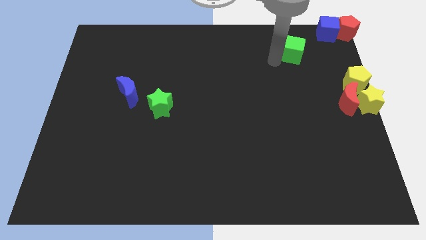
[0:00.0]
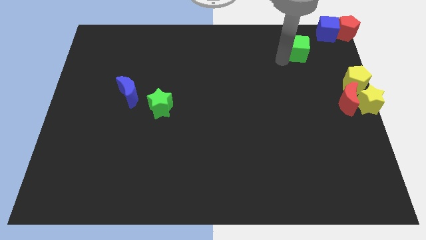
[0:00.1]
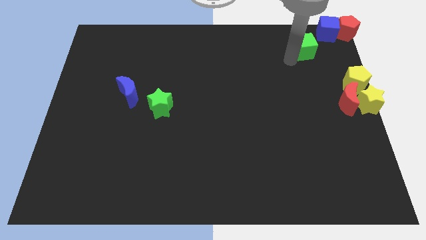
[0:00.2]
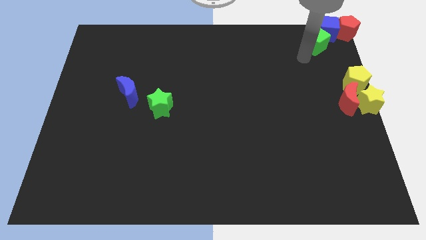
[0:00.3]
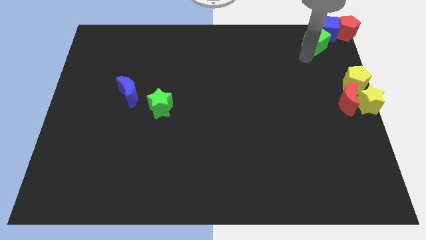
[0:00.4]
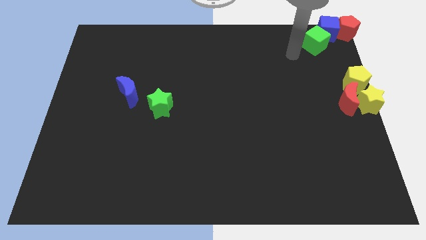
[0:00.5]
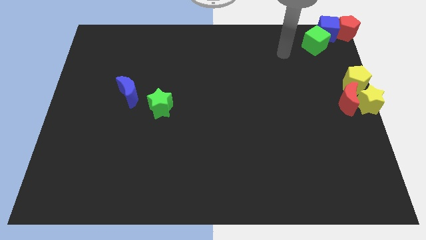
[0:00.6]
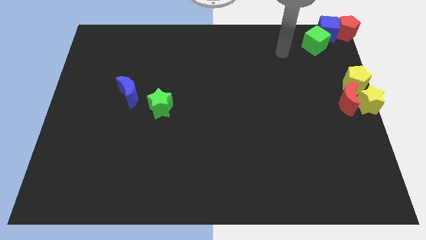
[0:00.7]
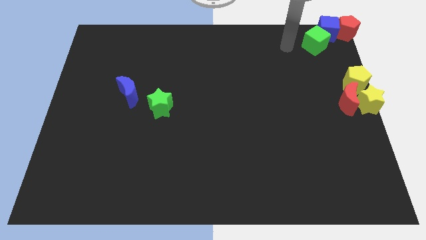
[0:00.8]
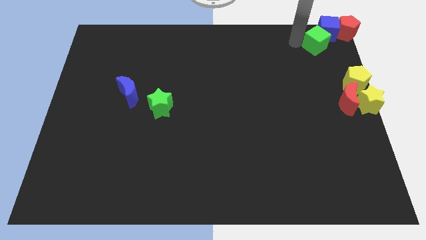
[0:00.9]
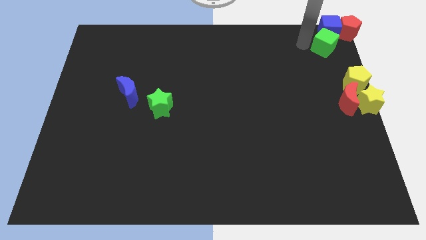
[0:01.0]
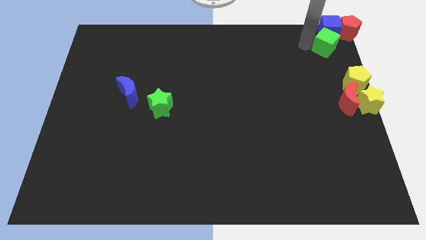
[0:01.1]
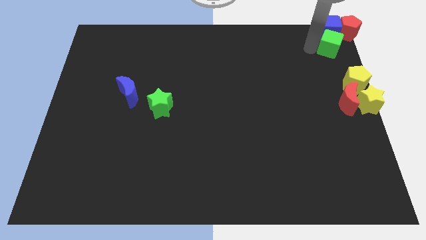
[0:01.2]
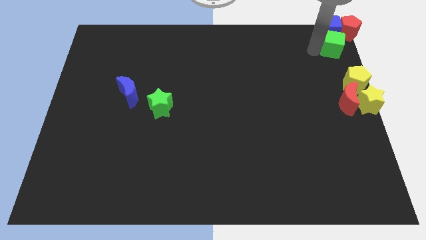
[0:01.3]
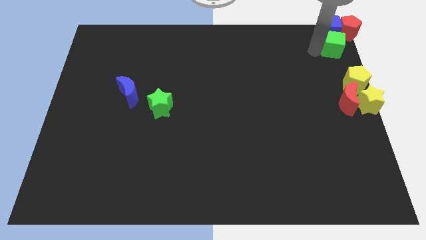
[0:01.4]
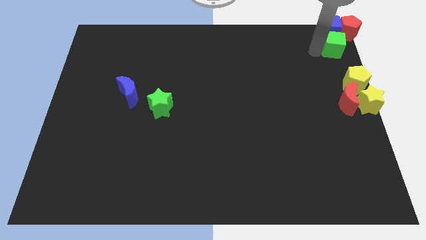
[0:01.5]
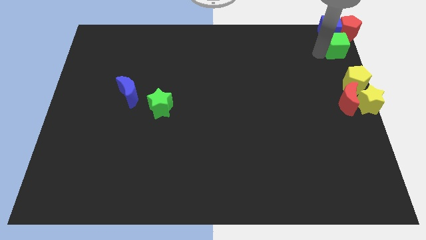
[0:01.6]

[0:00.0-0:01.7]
drag the green cube to the bottom of the blue cube

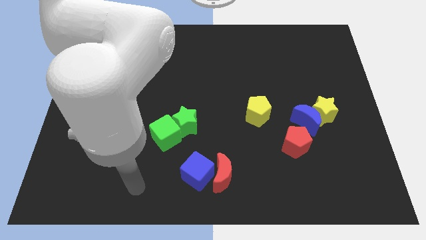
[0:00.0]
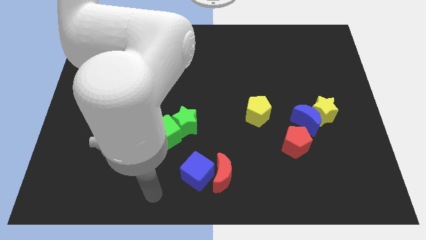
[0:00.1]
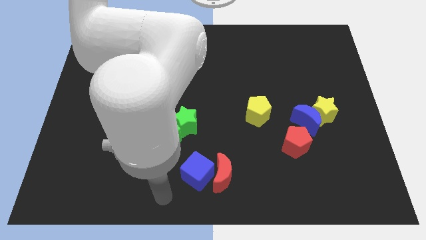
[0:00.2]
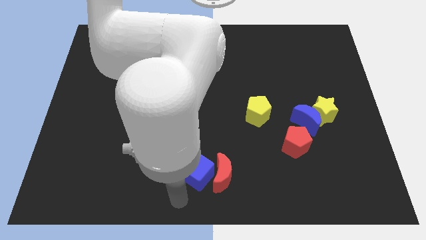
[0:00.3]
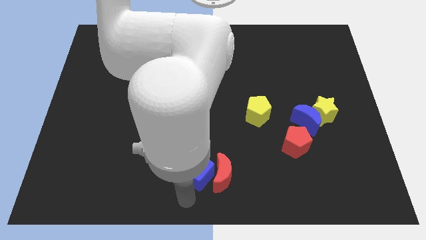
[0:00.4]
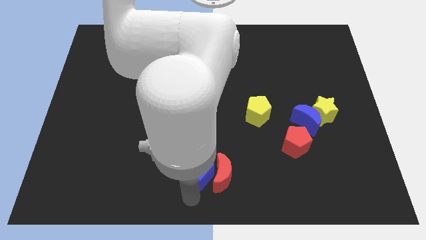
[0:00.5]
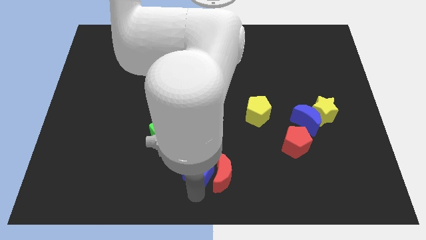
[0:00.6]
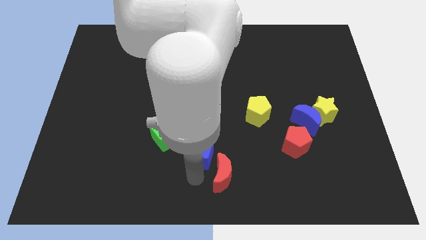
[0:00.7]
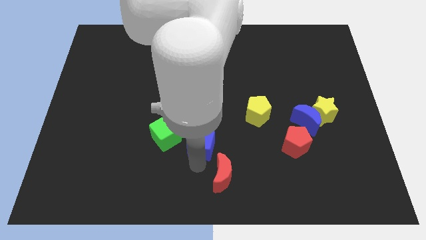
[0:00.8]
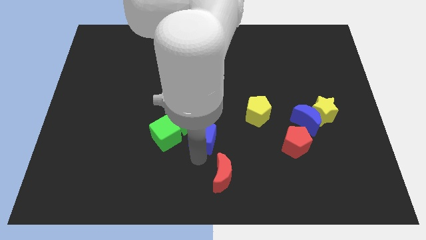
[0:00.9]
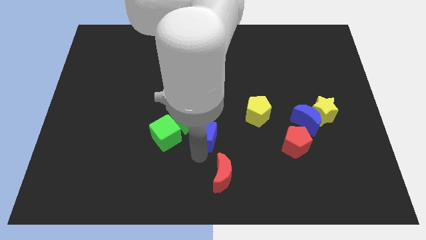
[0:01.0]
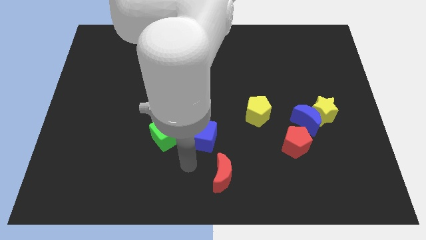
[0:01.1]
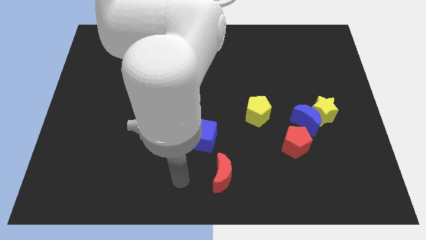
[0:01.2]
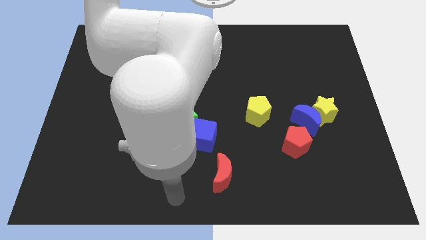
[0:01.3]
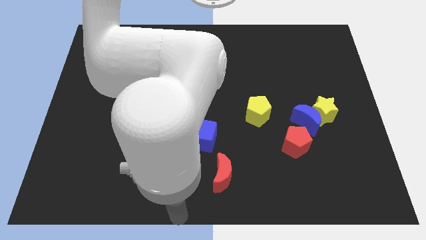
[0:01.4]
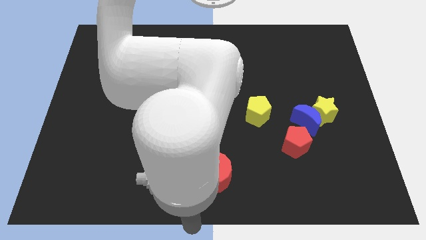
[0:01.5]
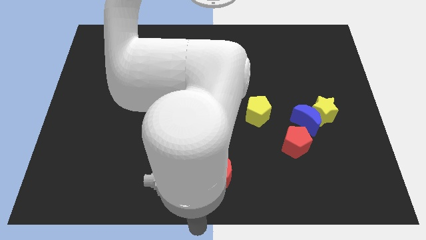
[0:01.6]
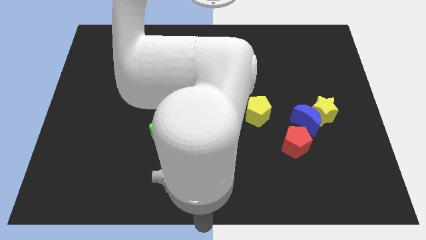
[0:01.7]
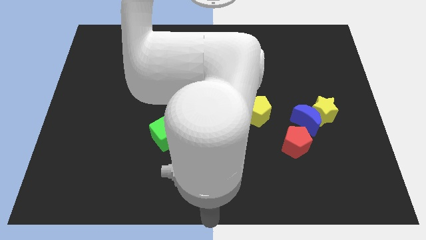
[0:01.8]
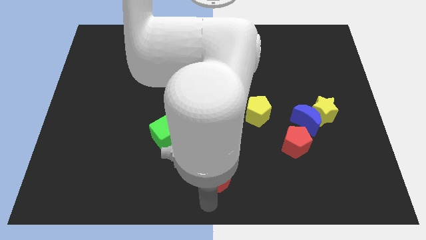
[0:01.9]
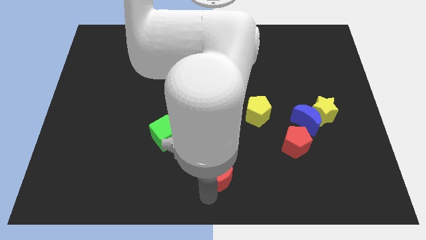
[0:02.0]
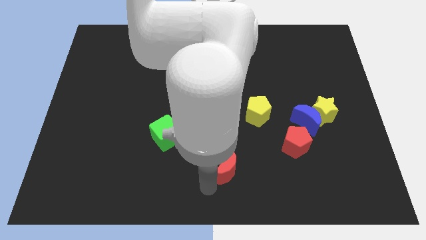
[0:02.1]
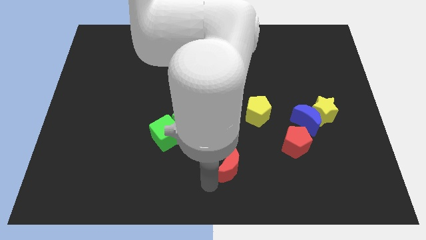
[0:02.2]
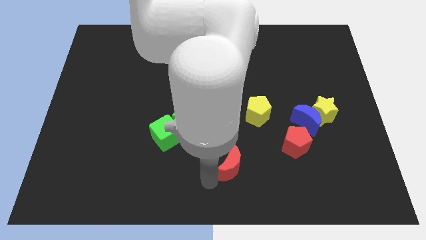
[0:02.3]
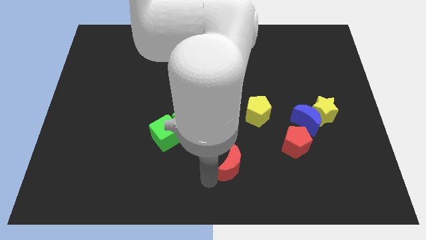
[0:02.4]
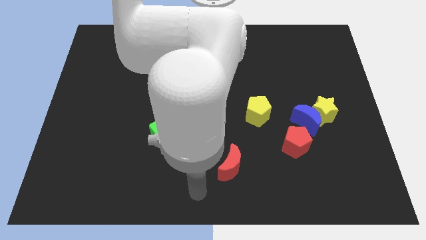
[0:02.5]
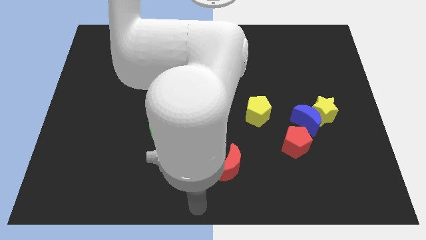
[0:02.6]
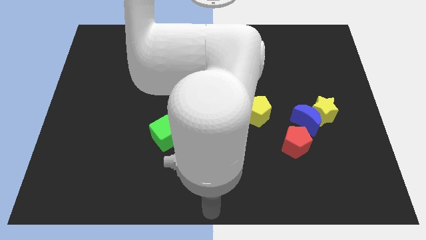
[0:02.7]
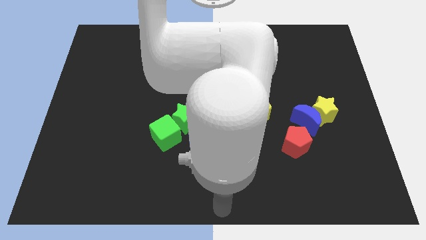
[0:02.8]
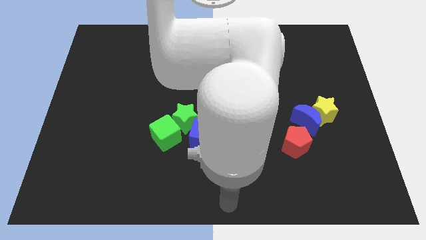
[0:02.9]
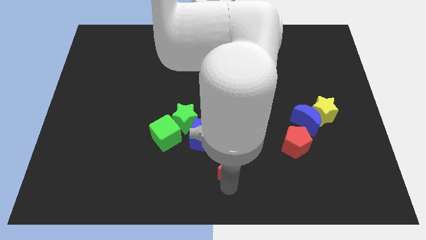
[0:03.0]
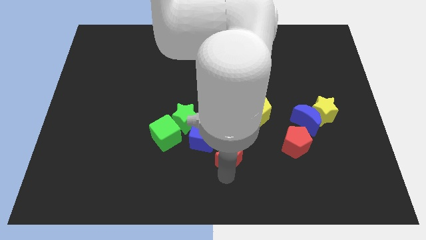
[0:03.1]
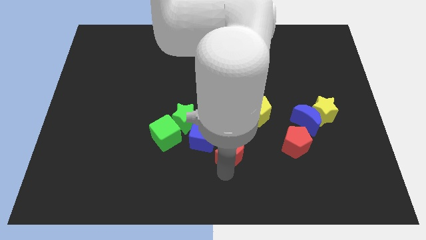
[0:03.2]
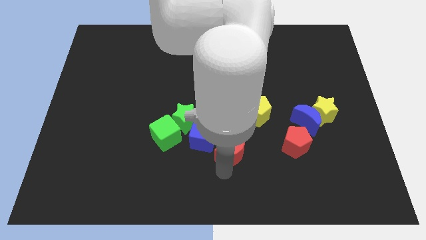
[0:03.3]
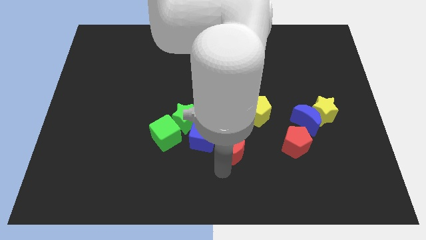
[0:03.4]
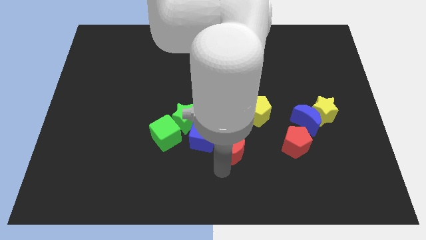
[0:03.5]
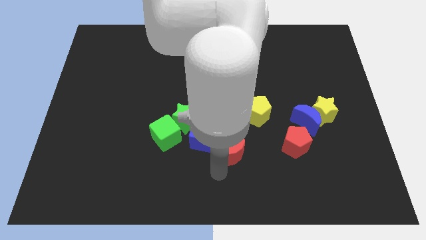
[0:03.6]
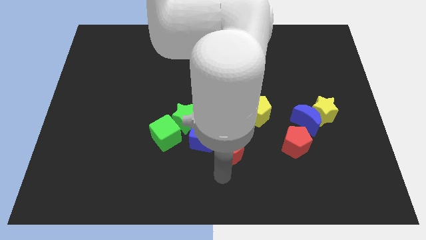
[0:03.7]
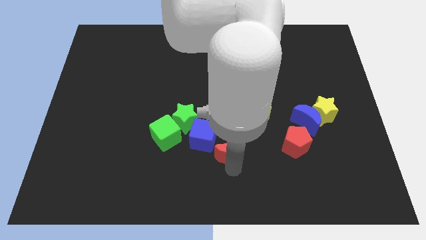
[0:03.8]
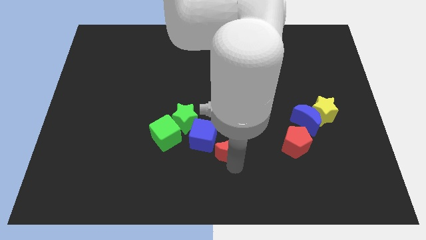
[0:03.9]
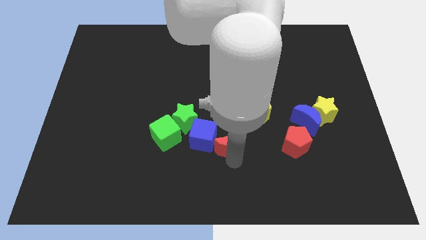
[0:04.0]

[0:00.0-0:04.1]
slide blue cube and red moon to the right of green cube

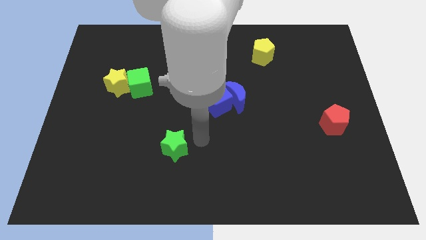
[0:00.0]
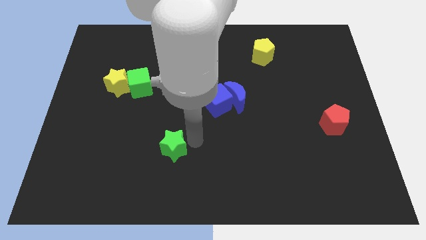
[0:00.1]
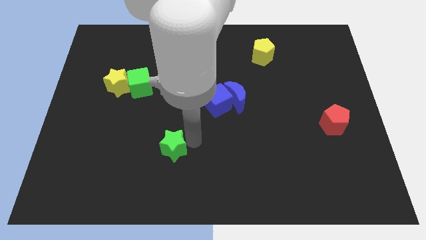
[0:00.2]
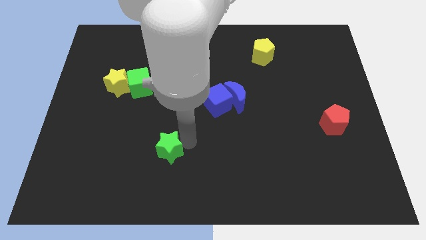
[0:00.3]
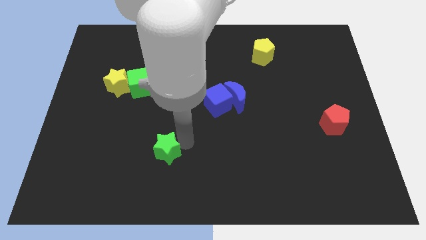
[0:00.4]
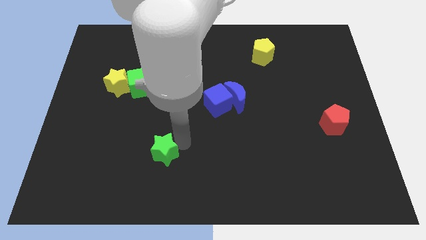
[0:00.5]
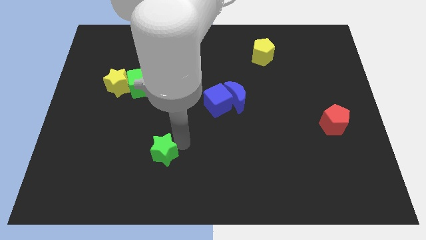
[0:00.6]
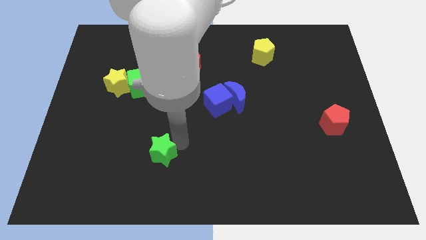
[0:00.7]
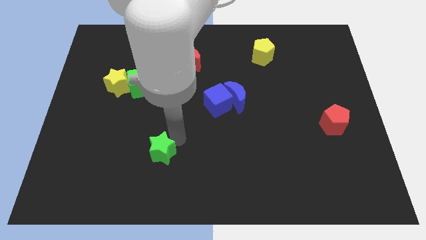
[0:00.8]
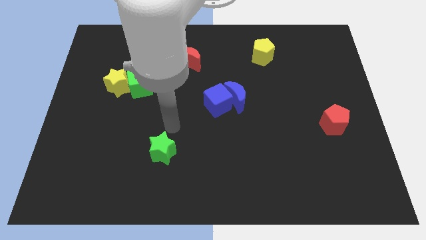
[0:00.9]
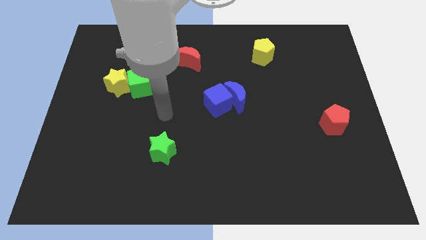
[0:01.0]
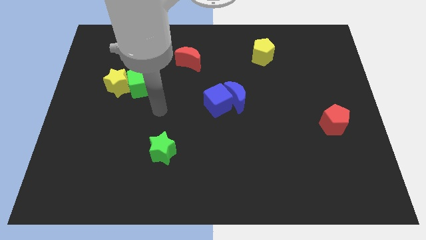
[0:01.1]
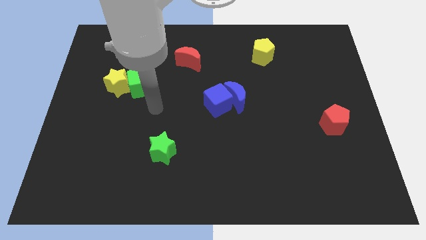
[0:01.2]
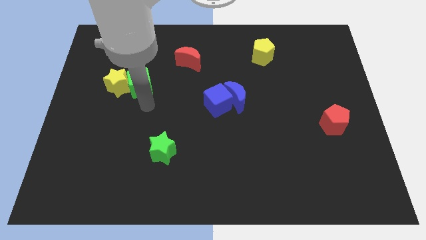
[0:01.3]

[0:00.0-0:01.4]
move the green star slightly left towards the bottom of the board

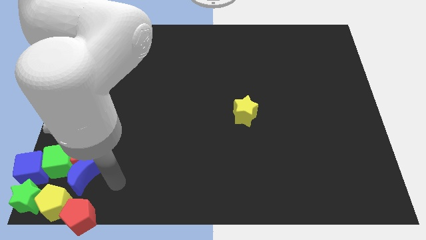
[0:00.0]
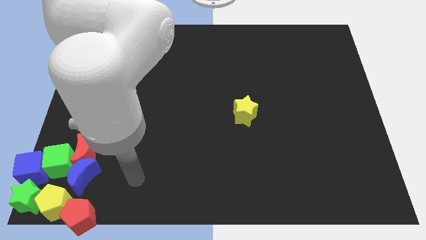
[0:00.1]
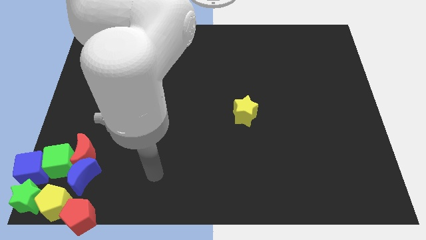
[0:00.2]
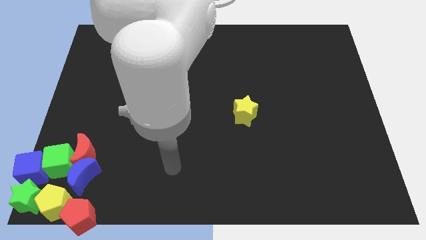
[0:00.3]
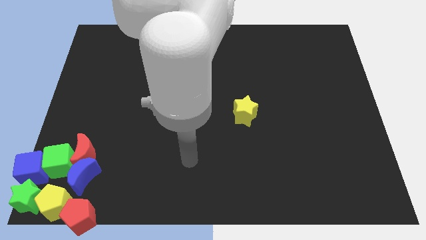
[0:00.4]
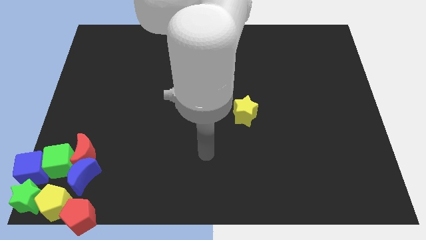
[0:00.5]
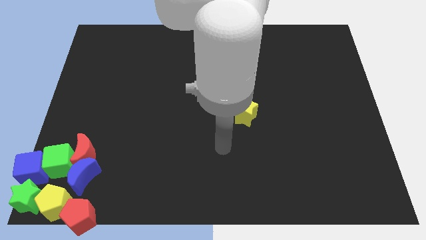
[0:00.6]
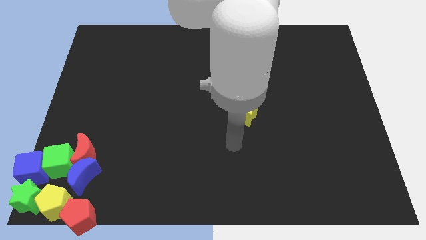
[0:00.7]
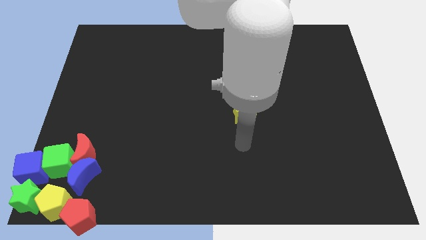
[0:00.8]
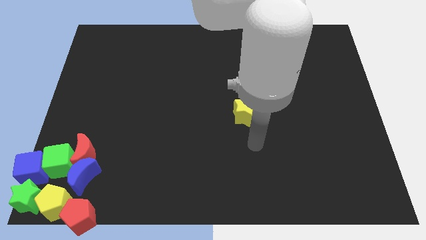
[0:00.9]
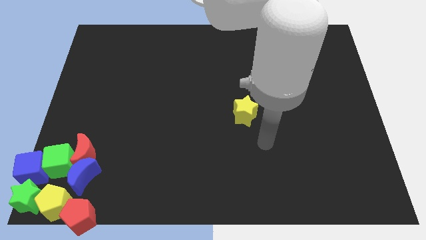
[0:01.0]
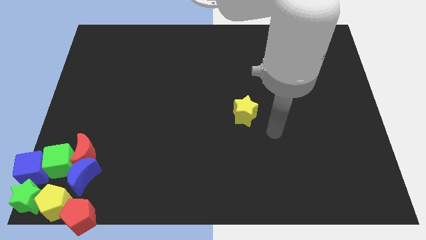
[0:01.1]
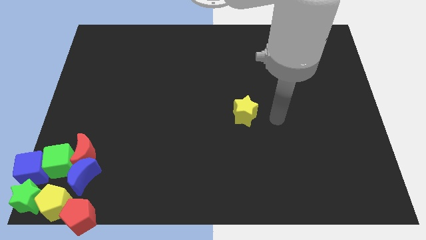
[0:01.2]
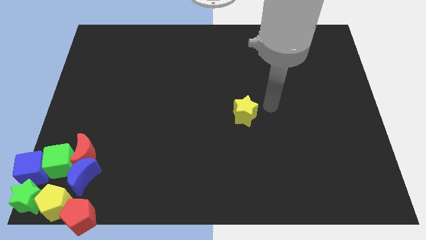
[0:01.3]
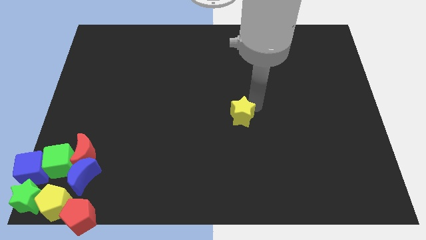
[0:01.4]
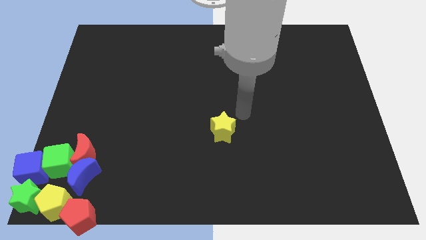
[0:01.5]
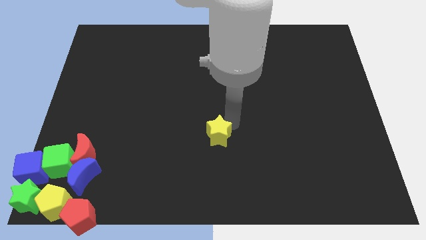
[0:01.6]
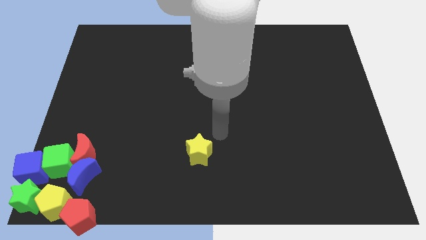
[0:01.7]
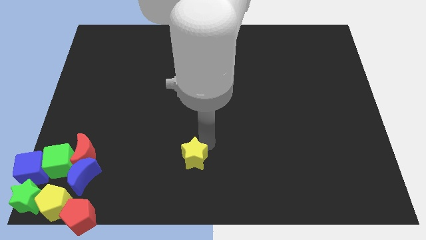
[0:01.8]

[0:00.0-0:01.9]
move the yellow star to the bottom of the board
